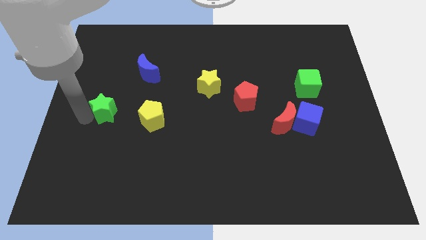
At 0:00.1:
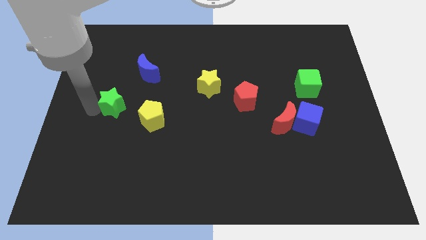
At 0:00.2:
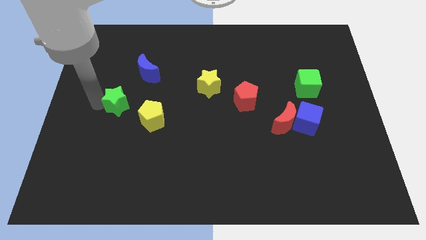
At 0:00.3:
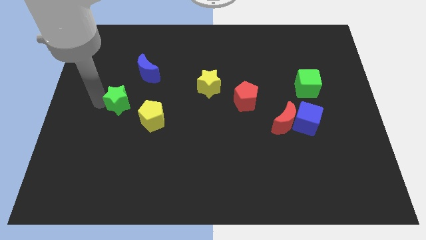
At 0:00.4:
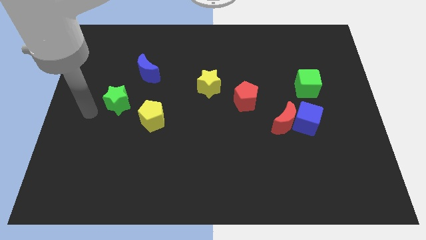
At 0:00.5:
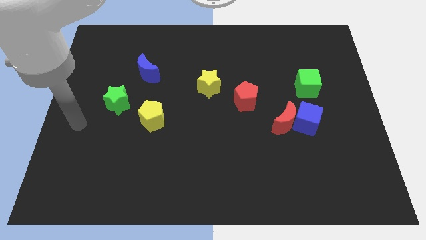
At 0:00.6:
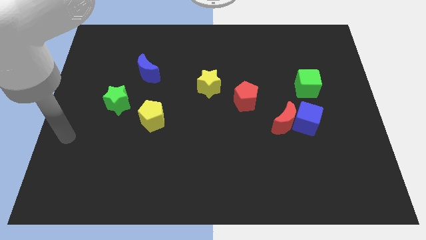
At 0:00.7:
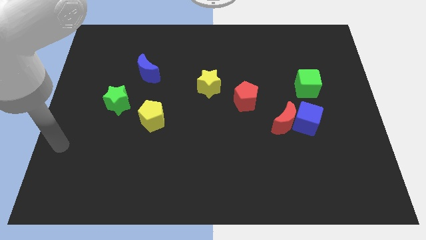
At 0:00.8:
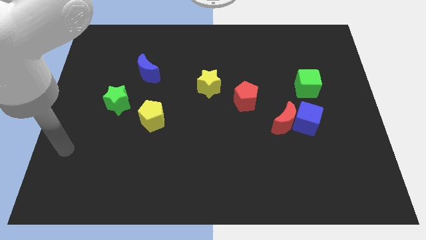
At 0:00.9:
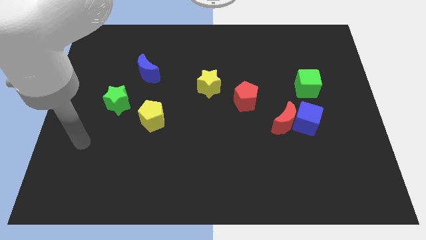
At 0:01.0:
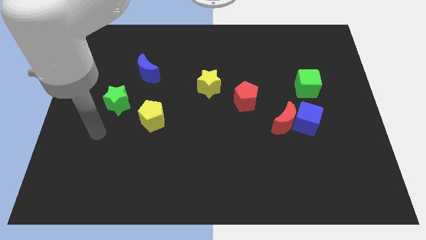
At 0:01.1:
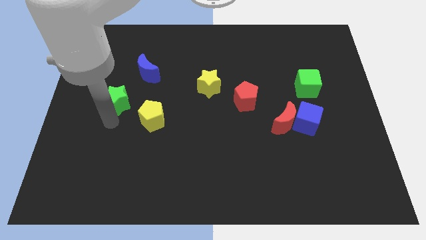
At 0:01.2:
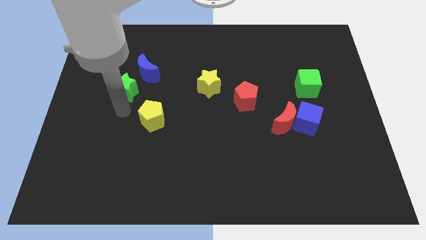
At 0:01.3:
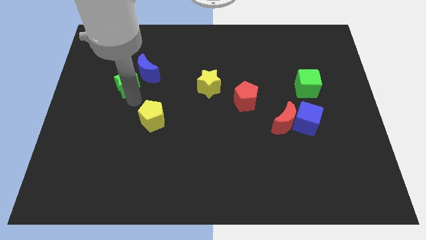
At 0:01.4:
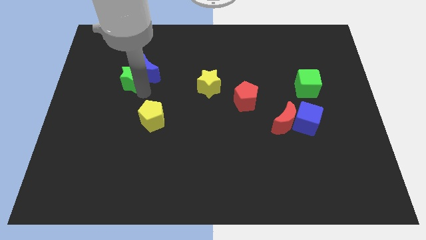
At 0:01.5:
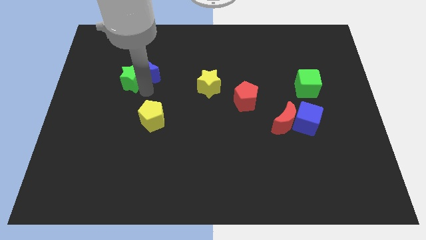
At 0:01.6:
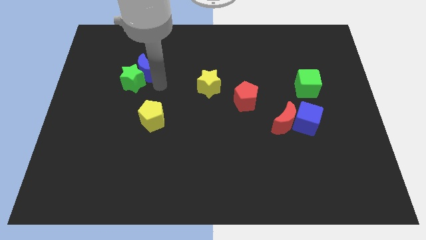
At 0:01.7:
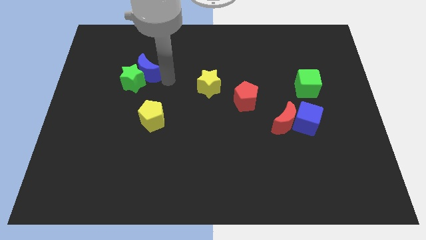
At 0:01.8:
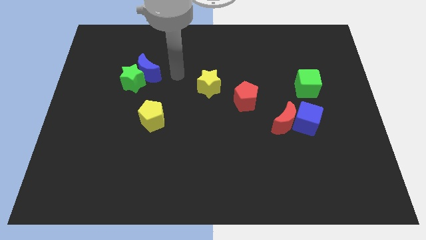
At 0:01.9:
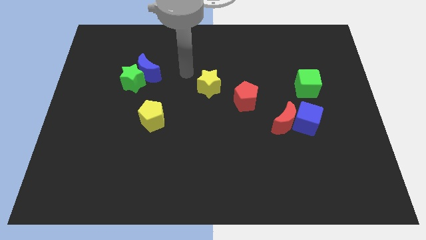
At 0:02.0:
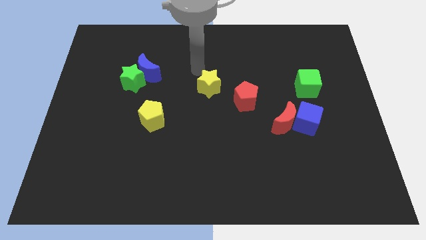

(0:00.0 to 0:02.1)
push the green star left to the blue crescent

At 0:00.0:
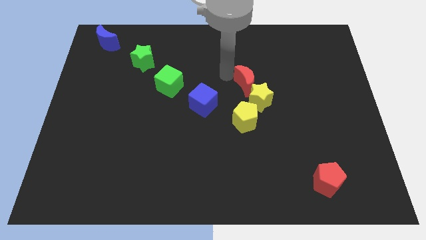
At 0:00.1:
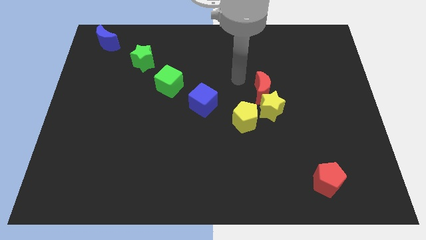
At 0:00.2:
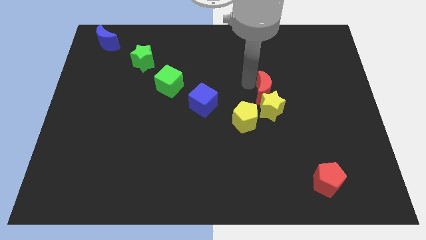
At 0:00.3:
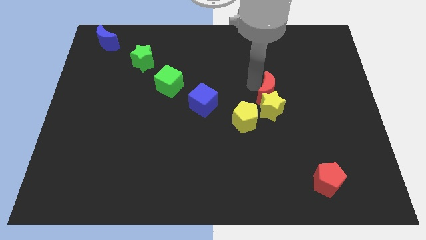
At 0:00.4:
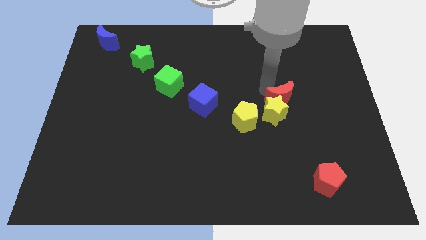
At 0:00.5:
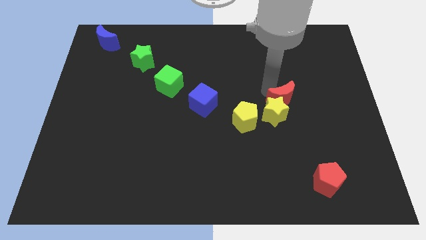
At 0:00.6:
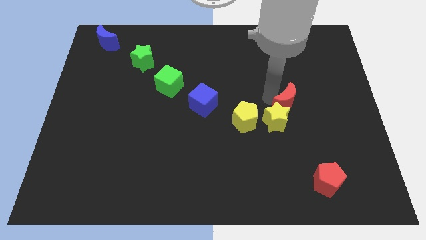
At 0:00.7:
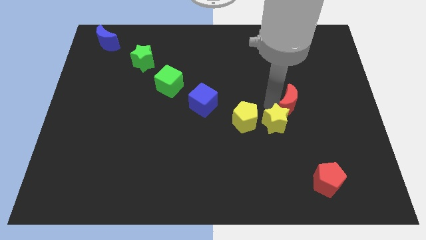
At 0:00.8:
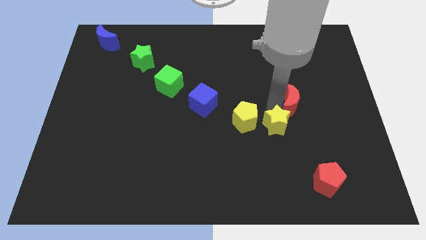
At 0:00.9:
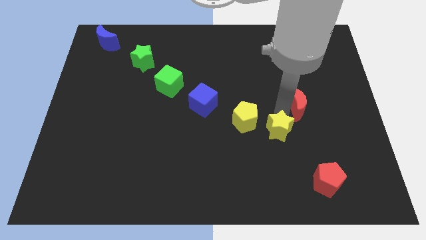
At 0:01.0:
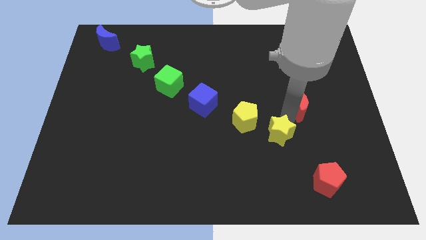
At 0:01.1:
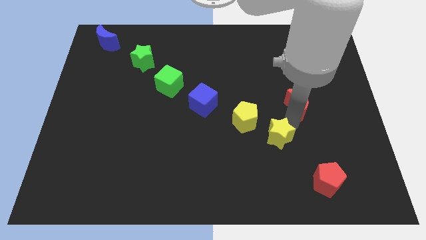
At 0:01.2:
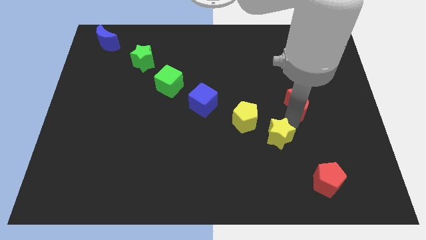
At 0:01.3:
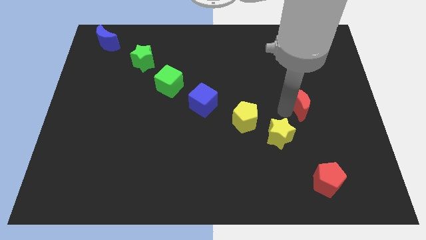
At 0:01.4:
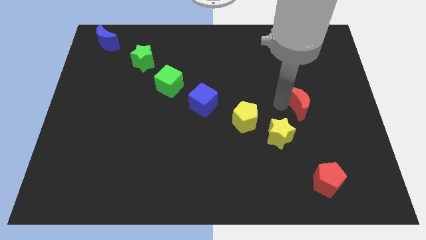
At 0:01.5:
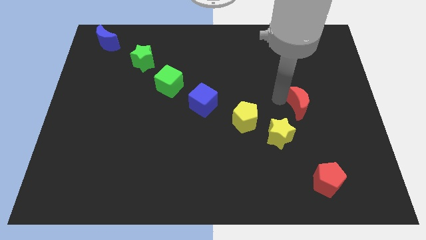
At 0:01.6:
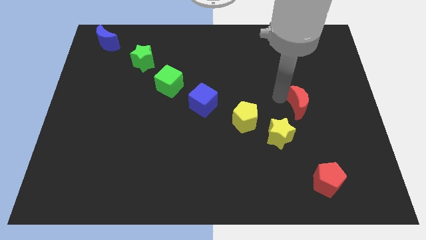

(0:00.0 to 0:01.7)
separate the yellow star from red crescenet

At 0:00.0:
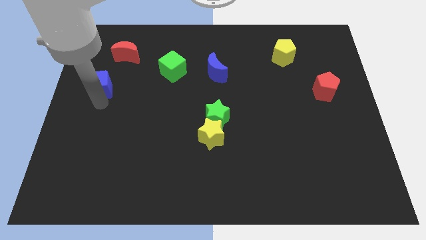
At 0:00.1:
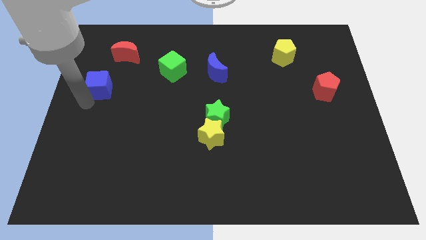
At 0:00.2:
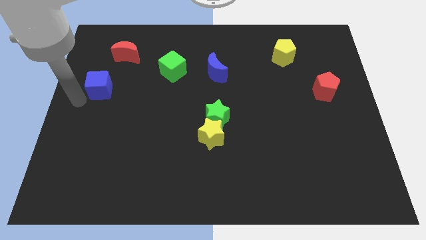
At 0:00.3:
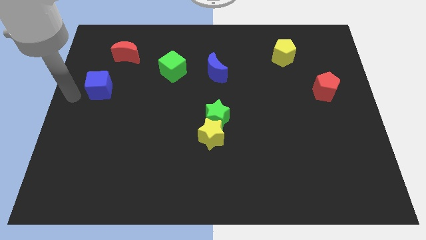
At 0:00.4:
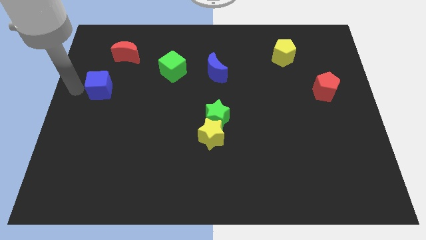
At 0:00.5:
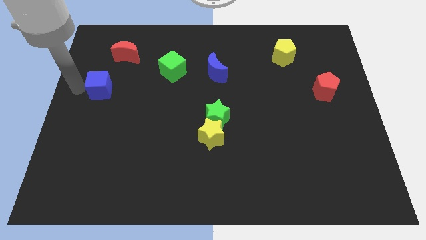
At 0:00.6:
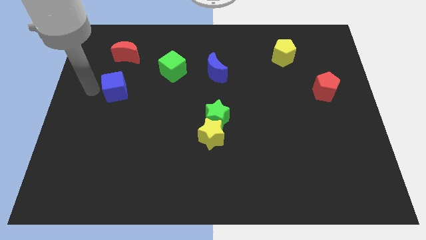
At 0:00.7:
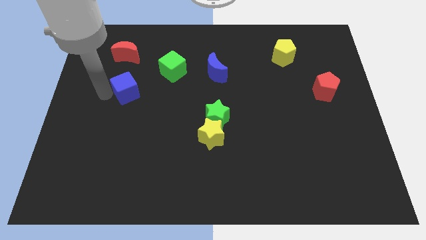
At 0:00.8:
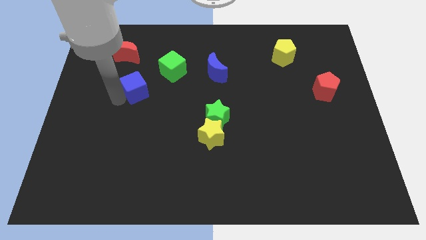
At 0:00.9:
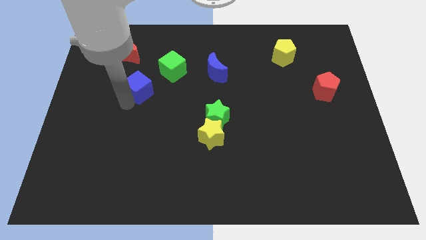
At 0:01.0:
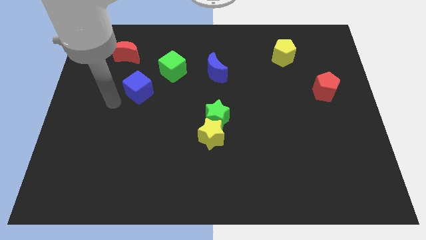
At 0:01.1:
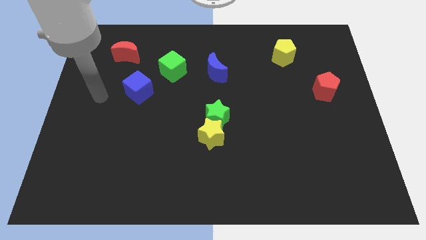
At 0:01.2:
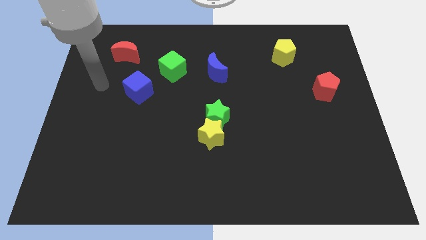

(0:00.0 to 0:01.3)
push the blue cube diagonal to the green cube

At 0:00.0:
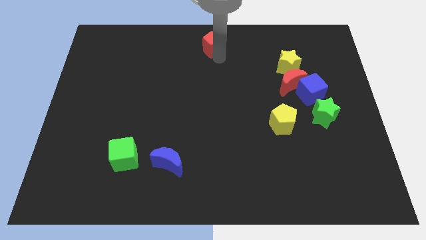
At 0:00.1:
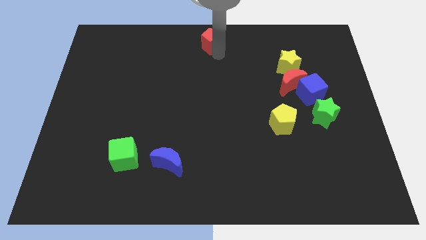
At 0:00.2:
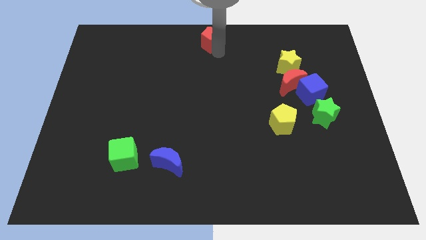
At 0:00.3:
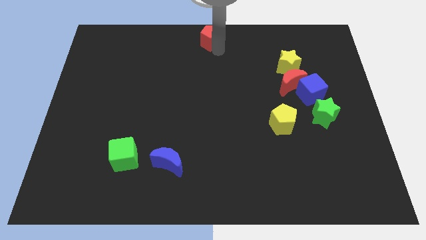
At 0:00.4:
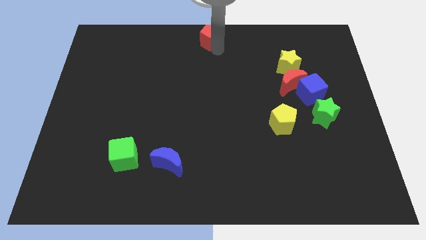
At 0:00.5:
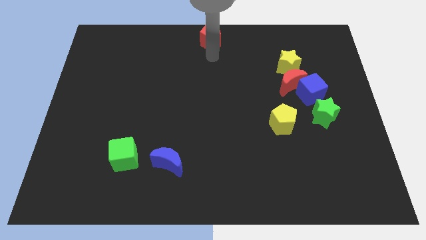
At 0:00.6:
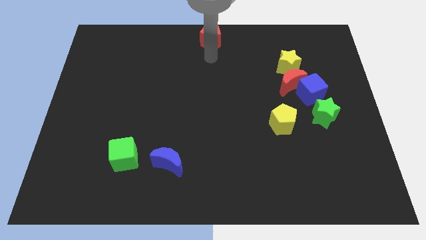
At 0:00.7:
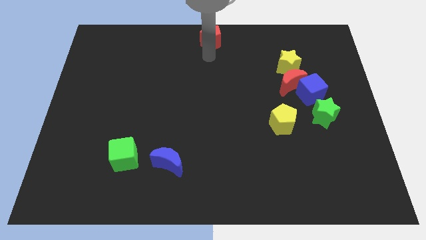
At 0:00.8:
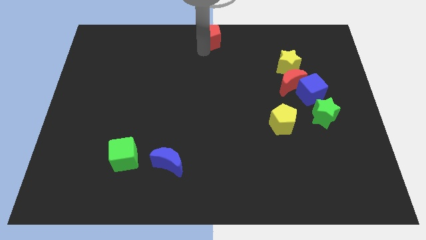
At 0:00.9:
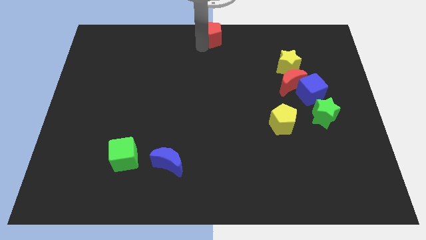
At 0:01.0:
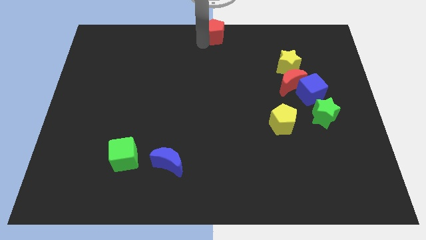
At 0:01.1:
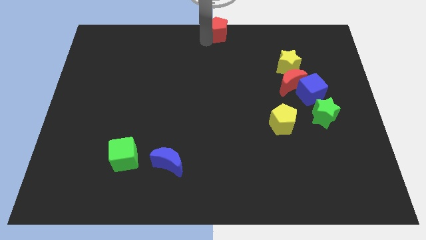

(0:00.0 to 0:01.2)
push red pentagon upwards

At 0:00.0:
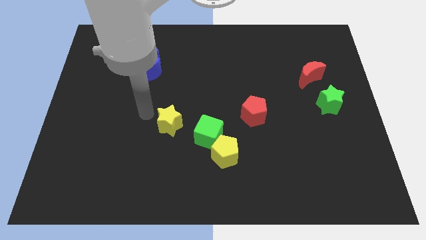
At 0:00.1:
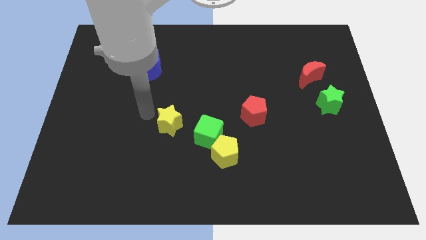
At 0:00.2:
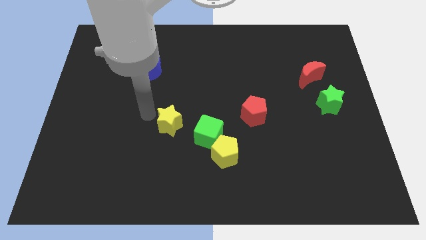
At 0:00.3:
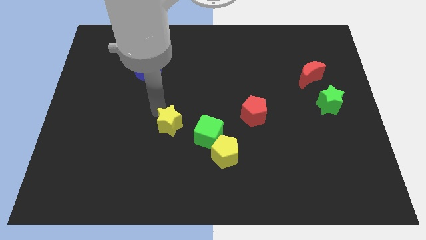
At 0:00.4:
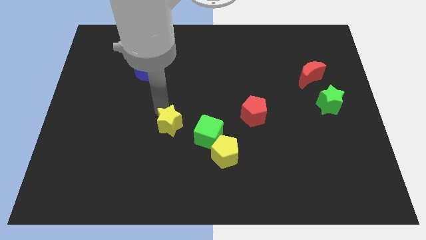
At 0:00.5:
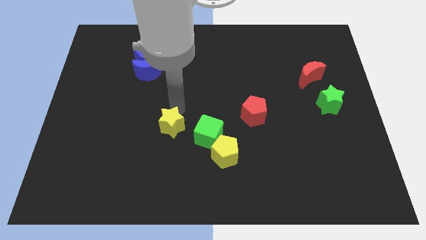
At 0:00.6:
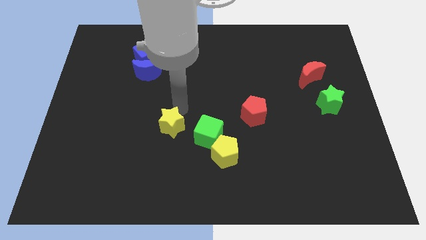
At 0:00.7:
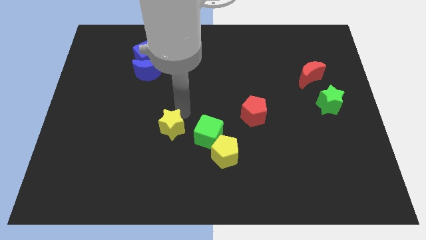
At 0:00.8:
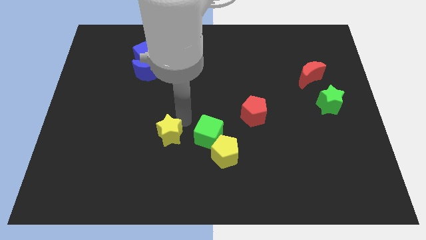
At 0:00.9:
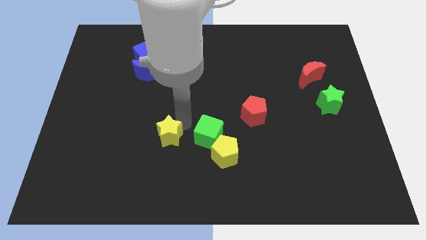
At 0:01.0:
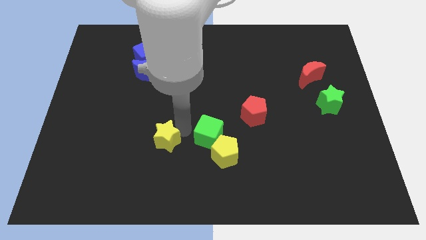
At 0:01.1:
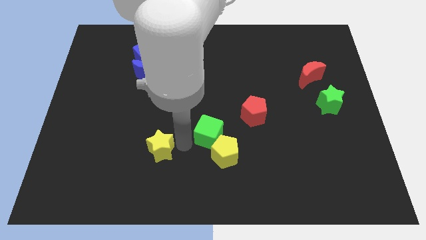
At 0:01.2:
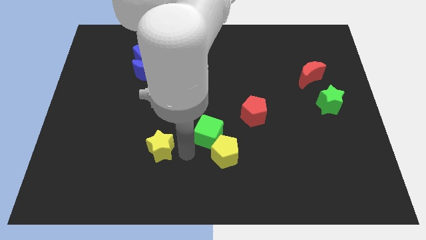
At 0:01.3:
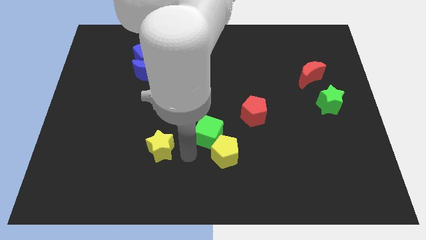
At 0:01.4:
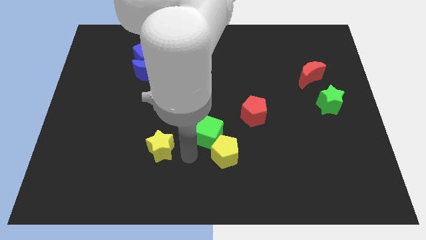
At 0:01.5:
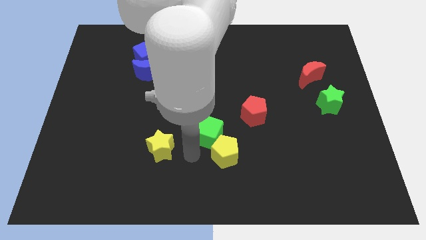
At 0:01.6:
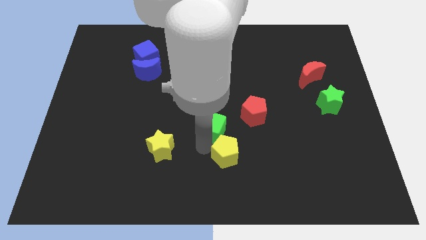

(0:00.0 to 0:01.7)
move the yellow star downwards

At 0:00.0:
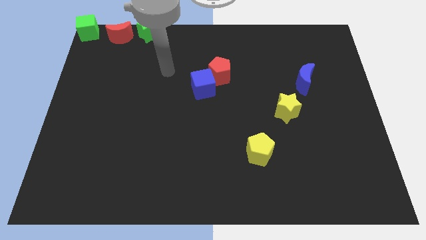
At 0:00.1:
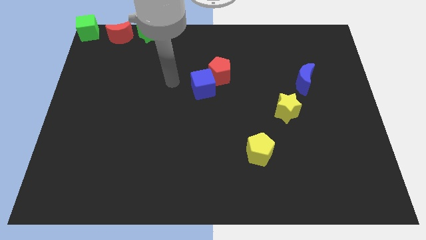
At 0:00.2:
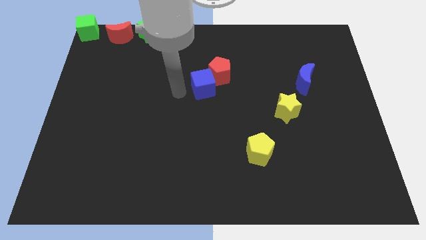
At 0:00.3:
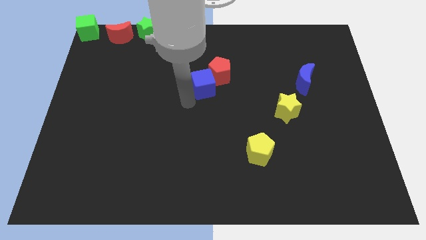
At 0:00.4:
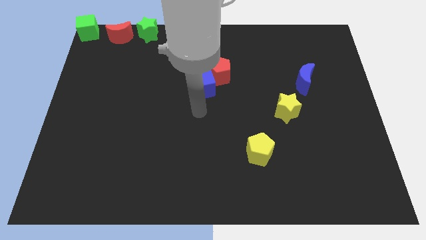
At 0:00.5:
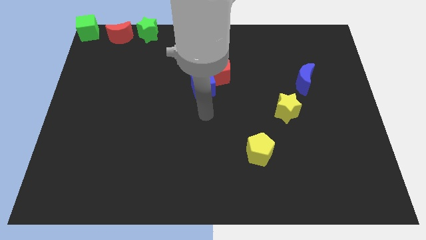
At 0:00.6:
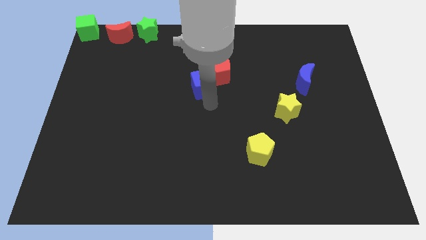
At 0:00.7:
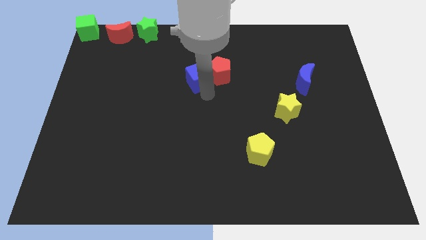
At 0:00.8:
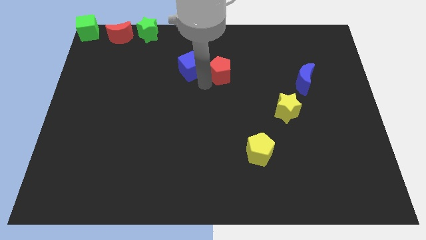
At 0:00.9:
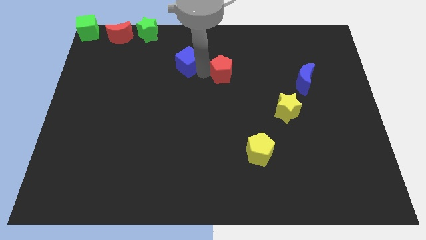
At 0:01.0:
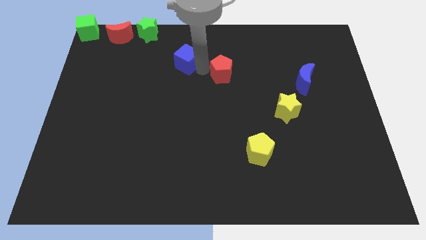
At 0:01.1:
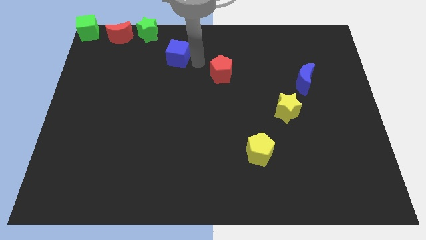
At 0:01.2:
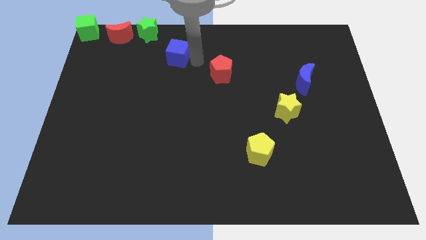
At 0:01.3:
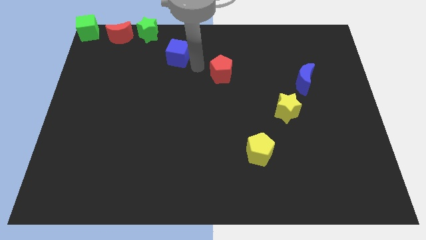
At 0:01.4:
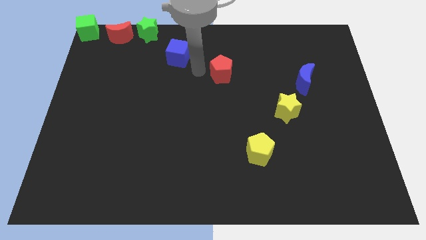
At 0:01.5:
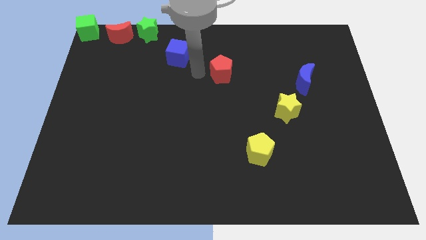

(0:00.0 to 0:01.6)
push the blue cube away from the red pentagon
